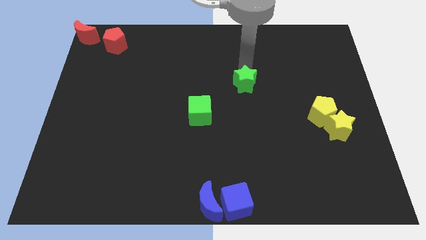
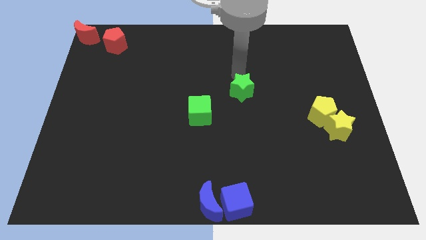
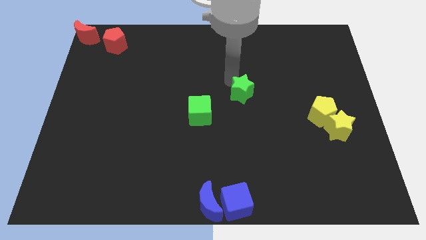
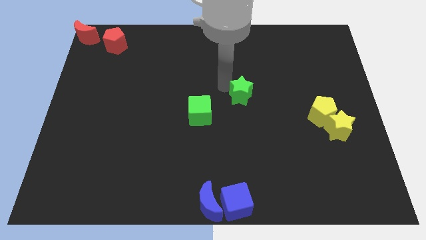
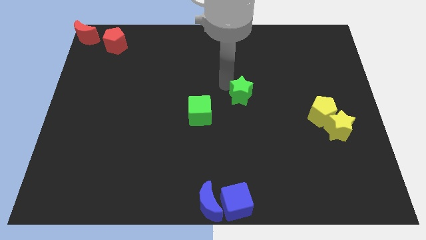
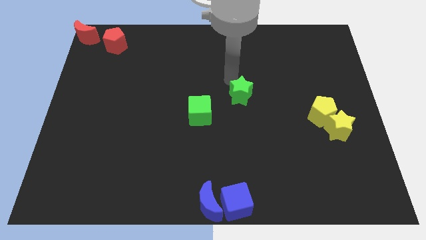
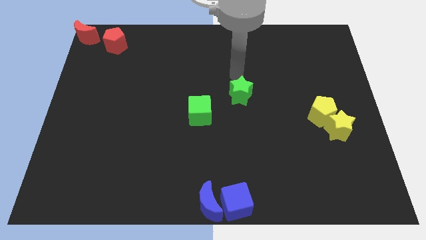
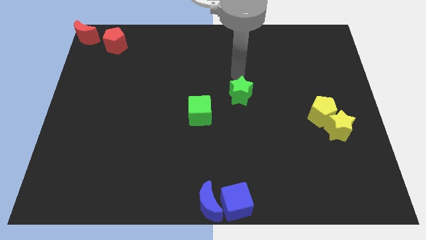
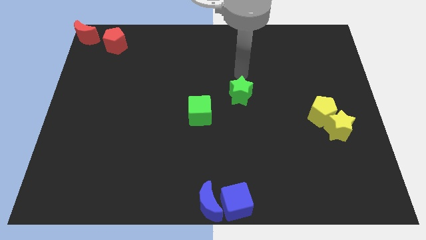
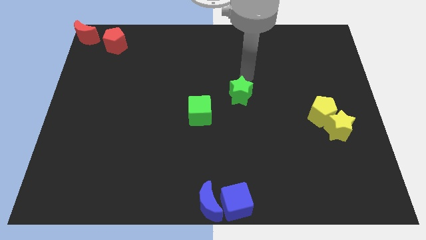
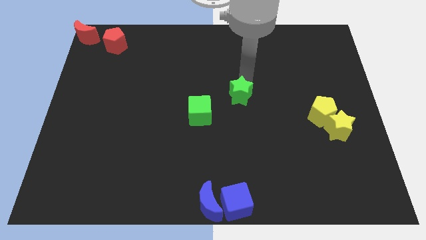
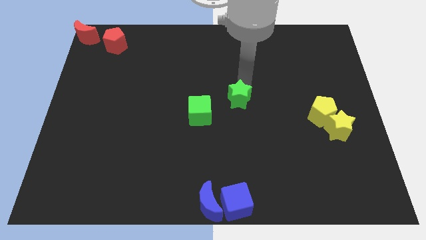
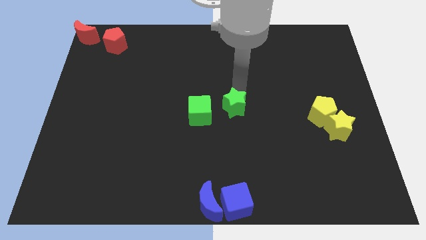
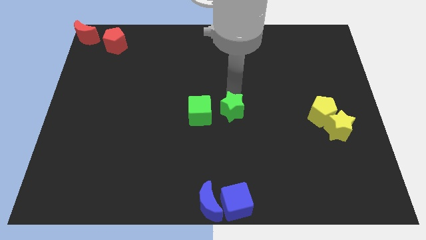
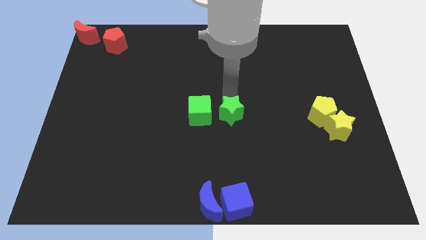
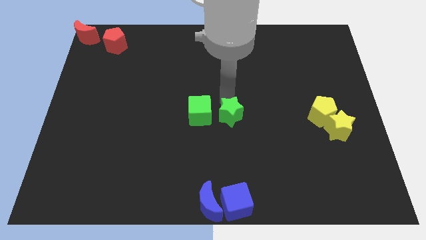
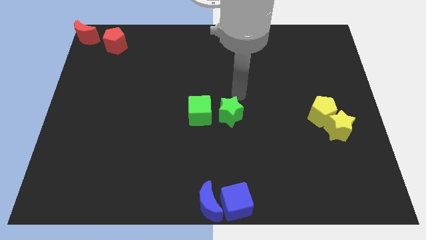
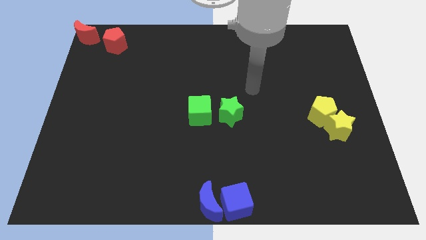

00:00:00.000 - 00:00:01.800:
place the green star to the right side of the green cube

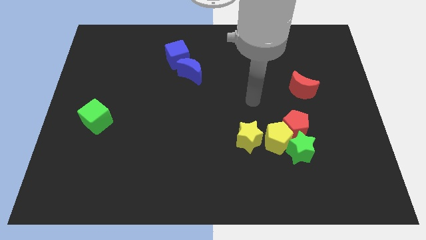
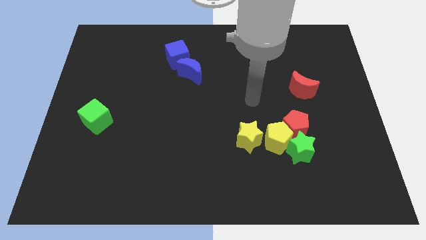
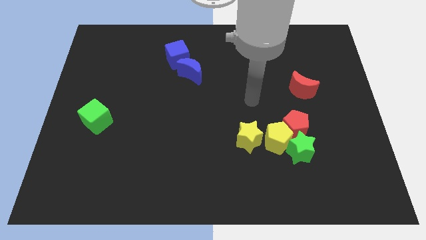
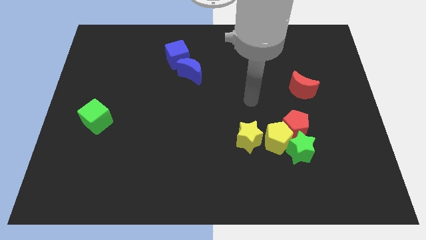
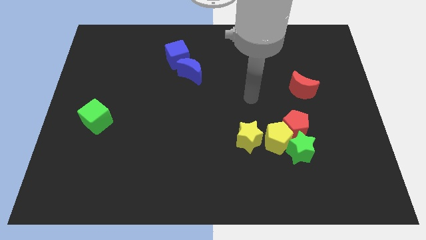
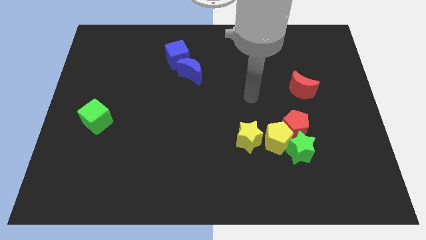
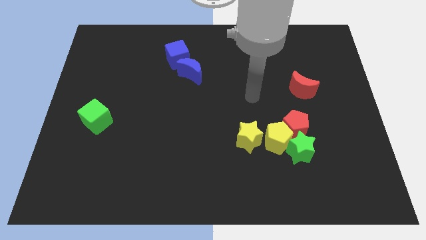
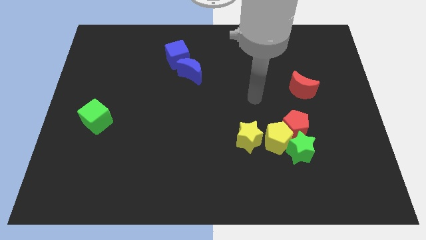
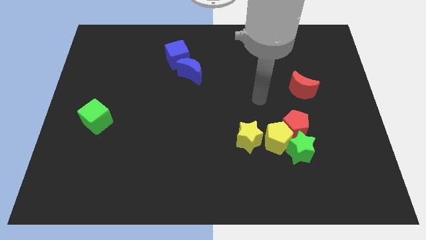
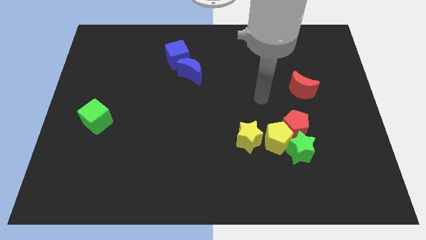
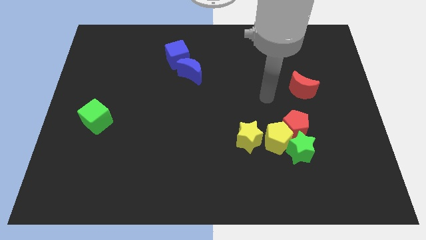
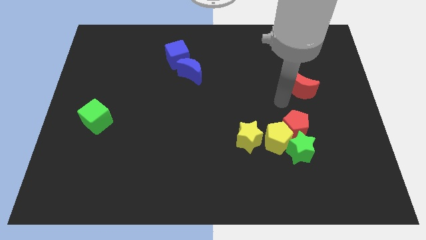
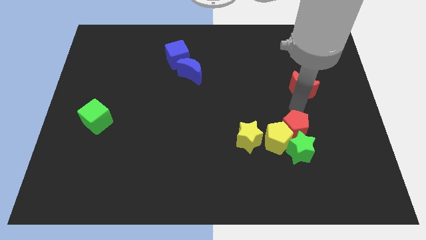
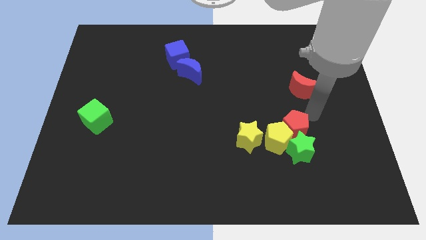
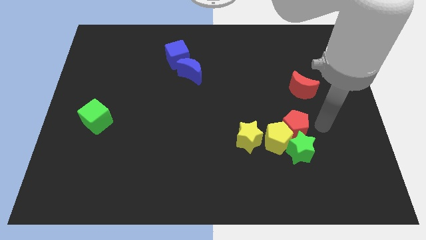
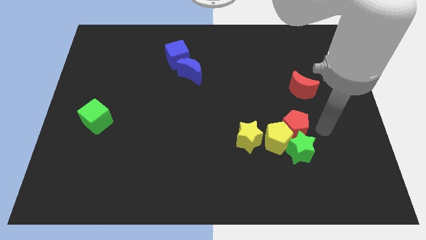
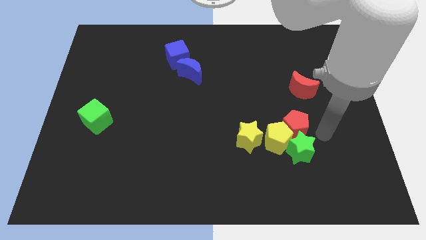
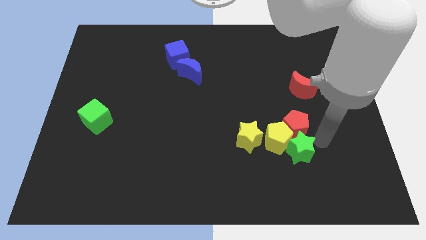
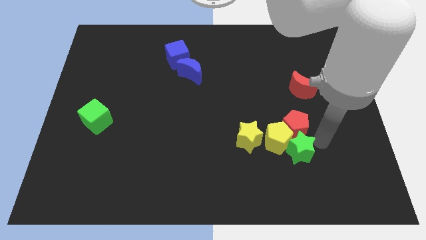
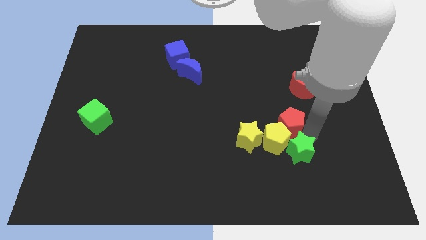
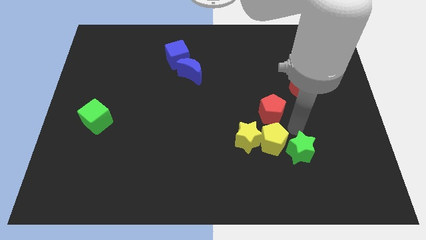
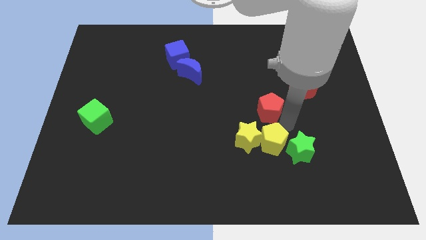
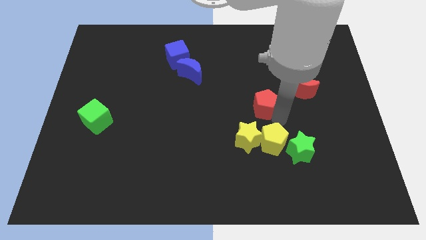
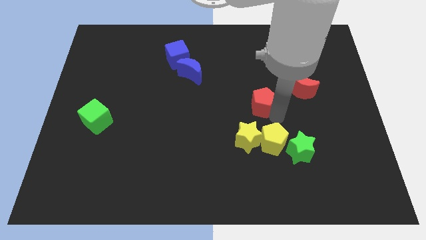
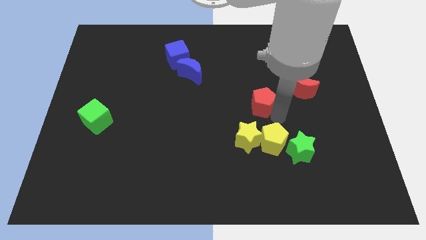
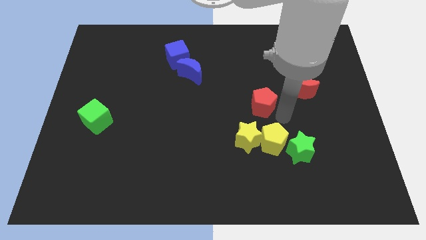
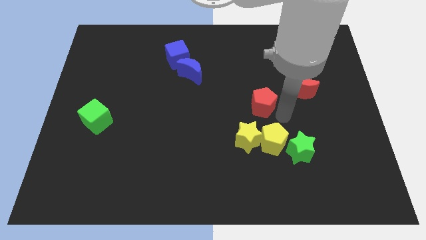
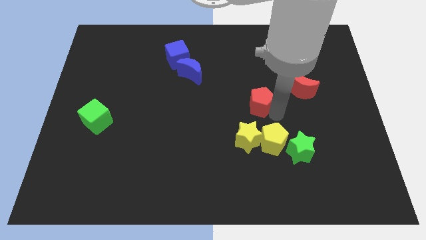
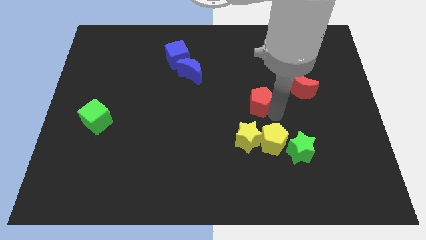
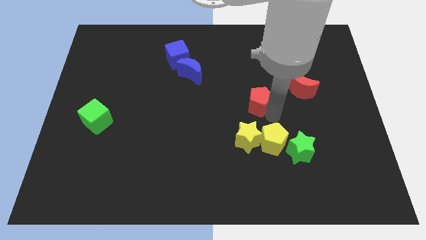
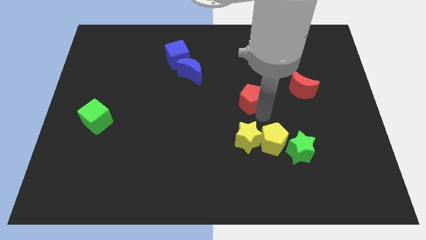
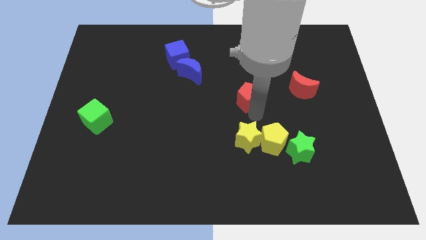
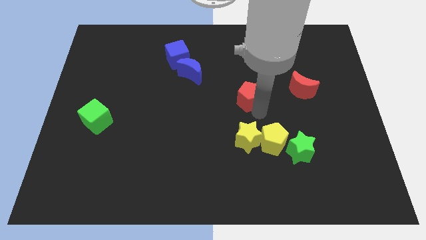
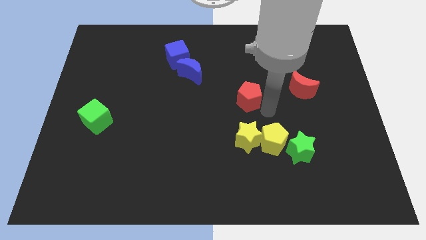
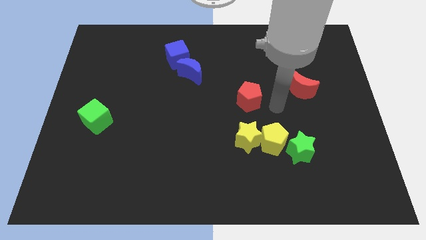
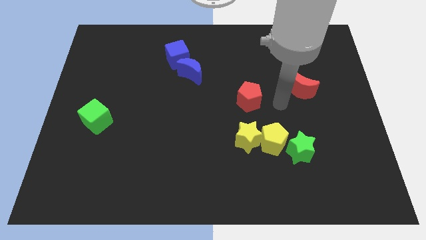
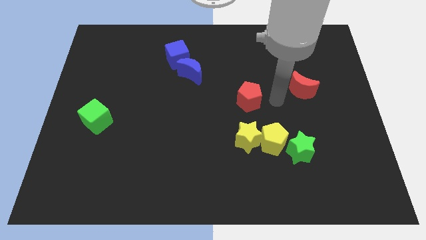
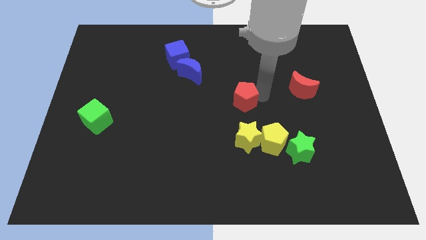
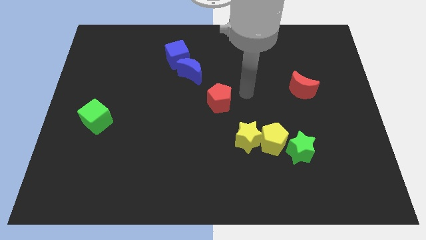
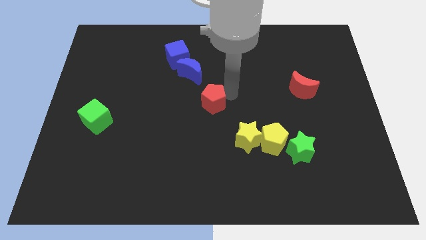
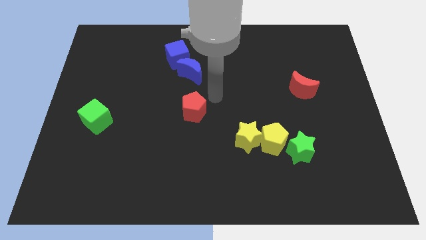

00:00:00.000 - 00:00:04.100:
separate the red pentagon from the group of blocks

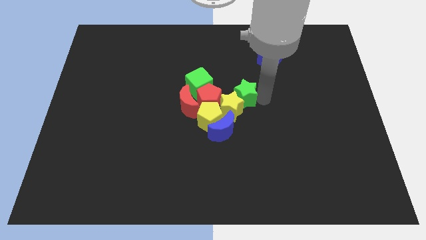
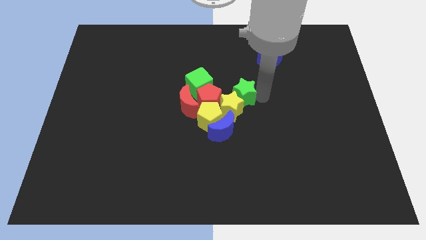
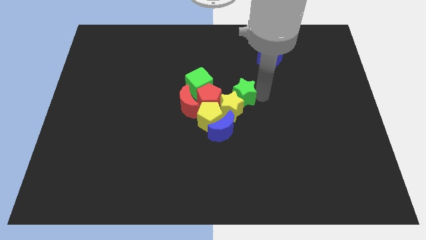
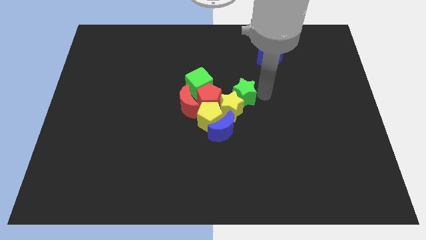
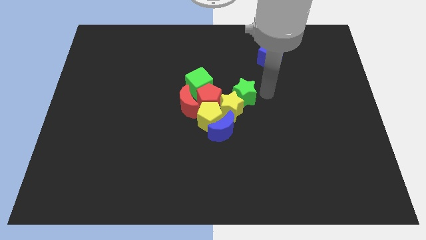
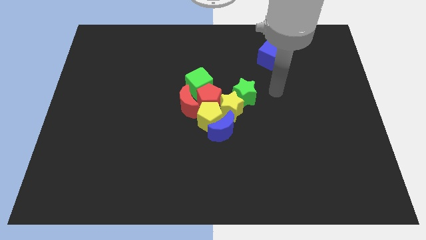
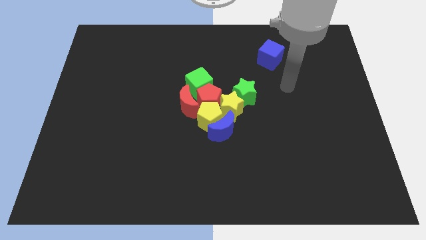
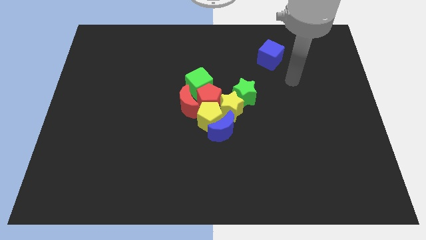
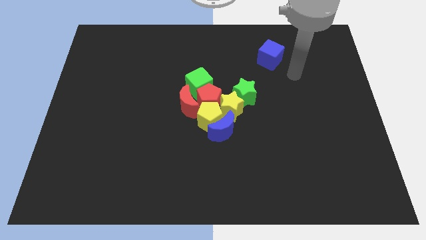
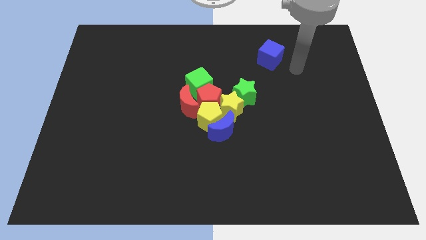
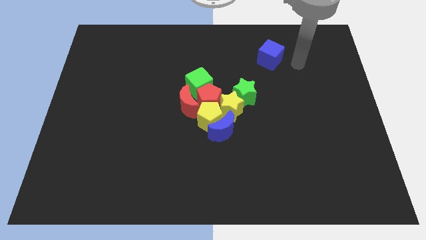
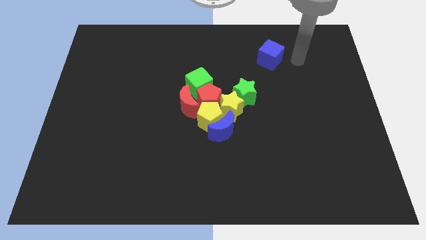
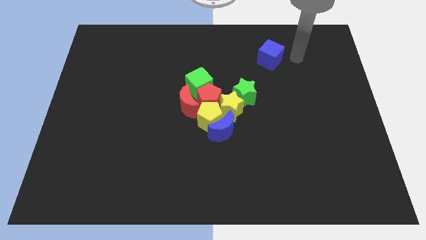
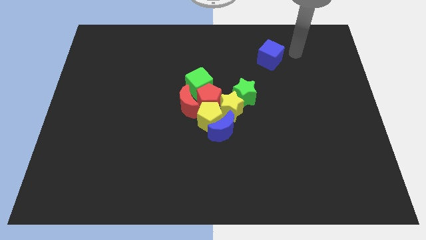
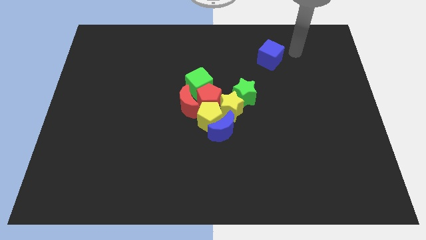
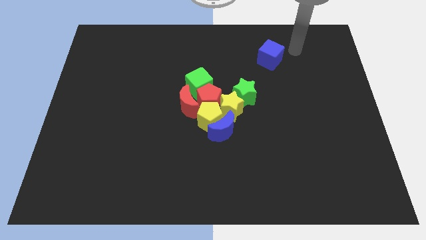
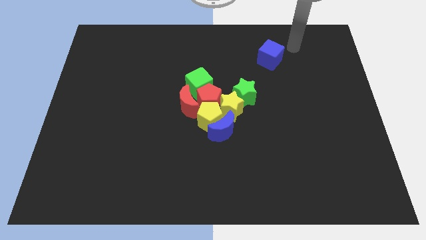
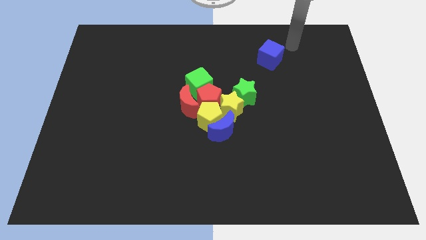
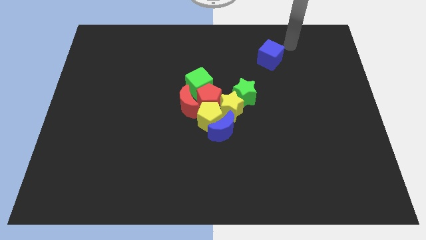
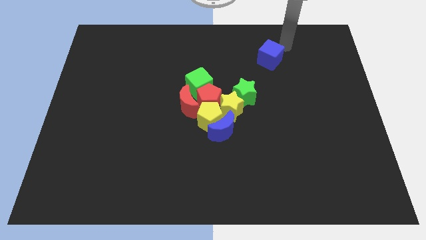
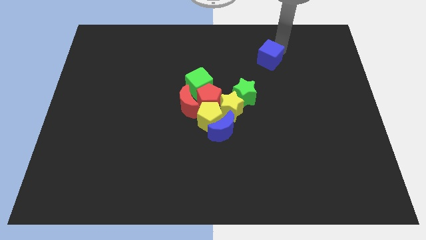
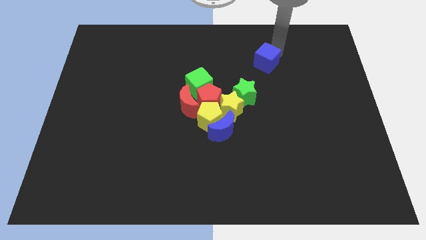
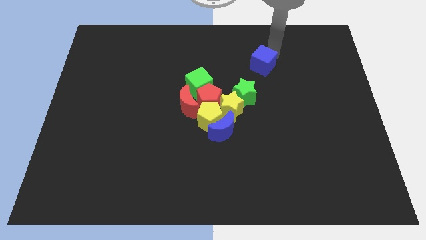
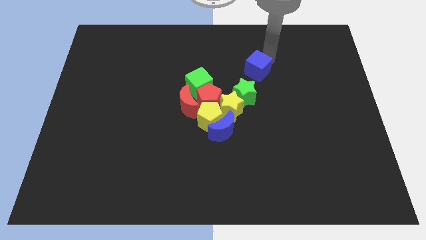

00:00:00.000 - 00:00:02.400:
slightly move the blue cube towards group of blocks

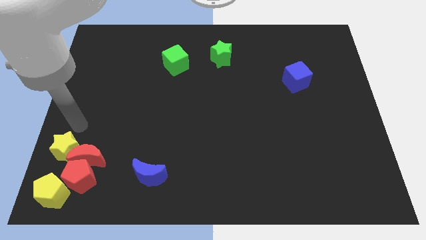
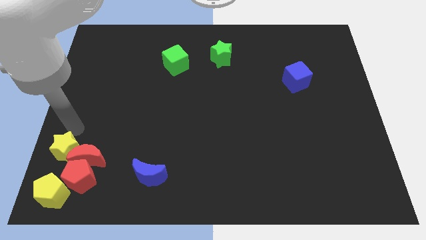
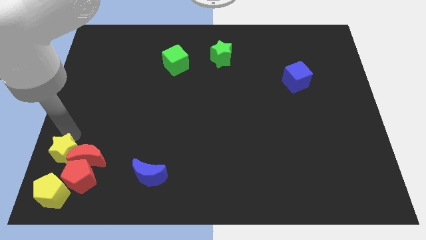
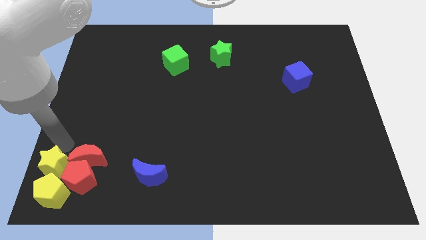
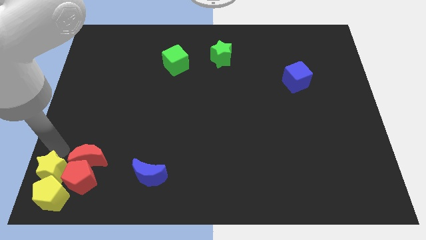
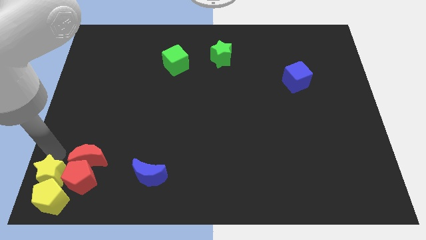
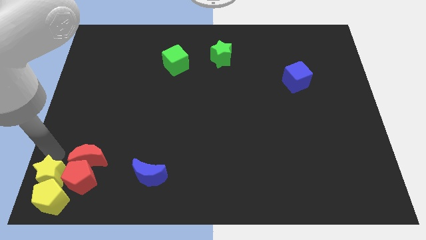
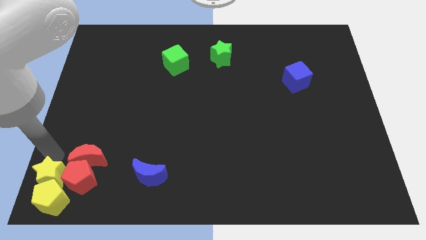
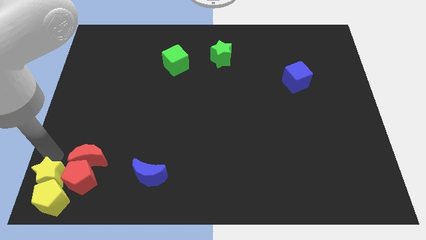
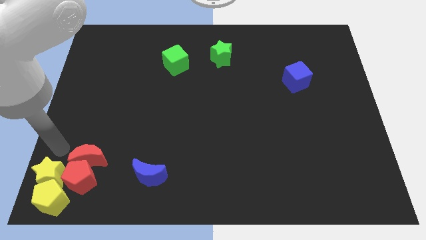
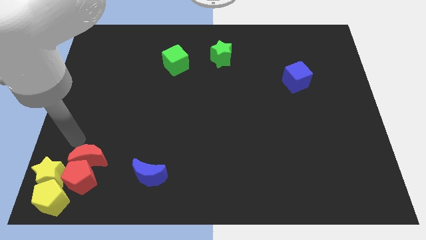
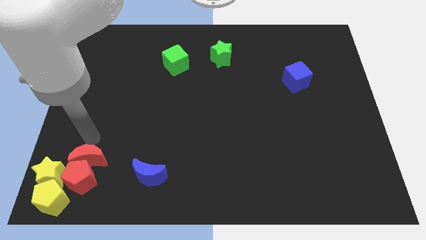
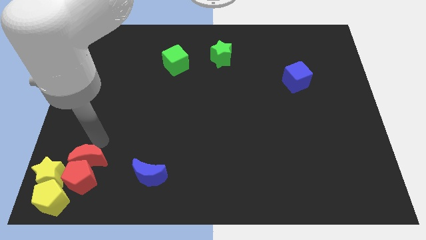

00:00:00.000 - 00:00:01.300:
move the yellow star into the yellow pentagon
